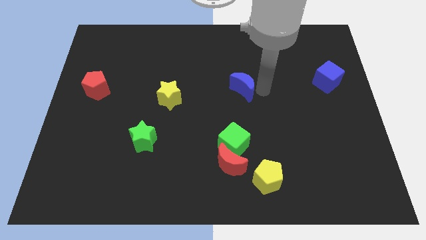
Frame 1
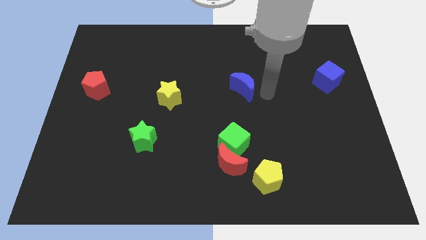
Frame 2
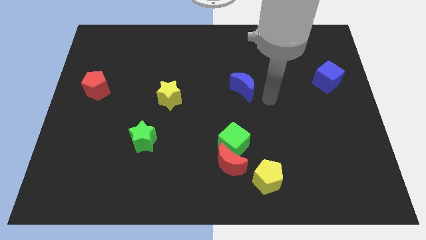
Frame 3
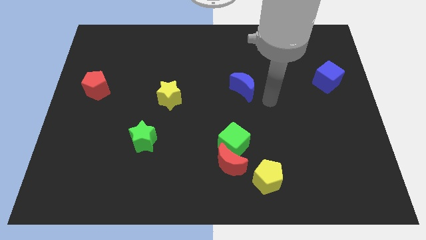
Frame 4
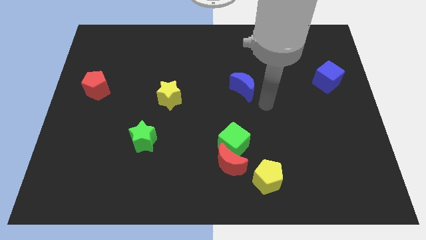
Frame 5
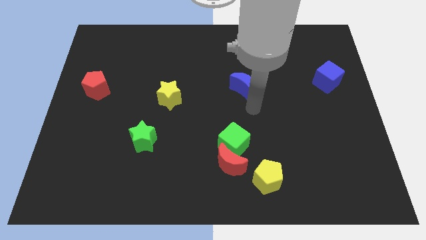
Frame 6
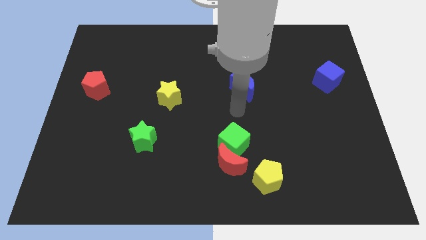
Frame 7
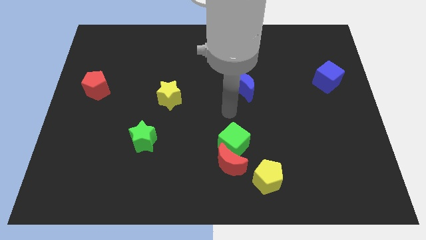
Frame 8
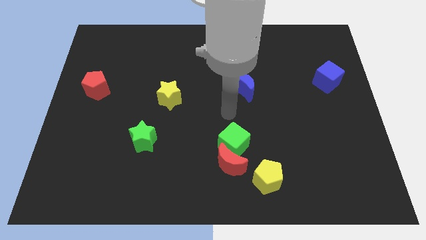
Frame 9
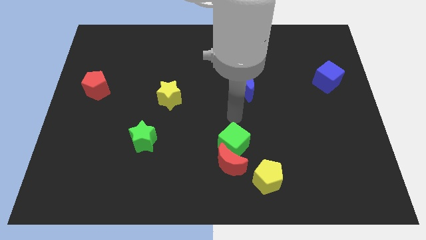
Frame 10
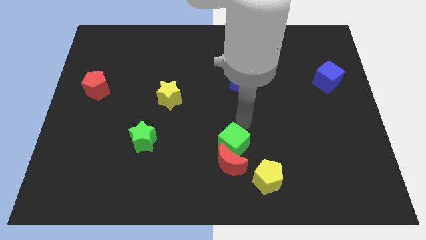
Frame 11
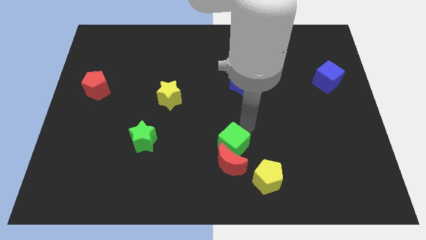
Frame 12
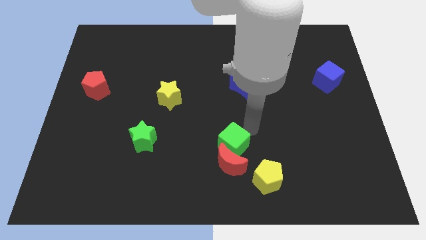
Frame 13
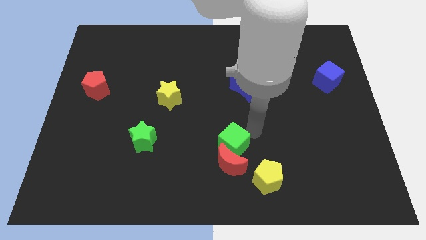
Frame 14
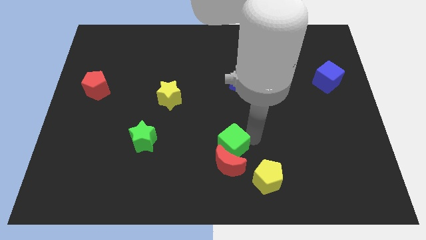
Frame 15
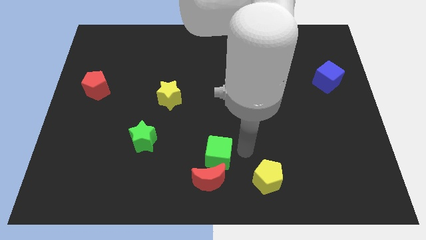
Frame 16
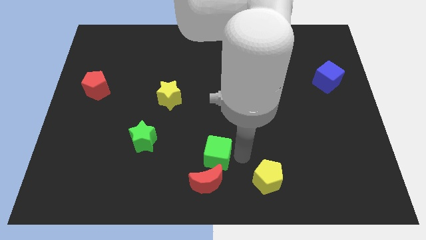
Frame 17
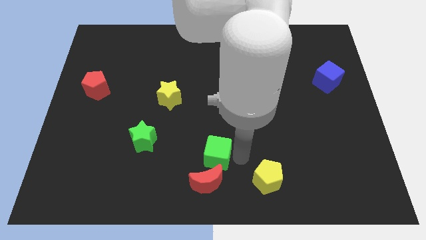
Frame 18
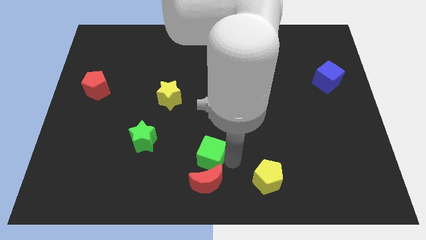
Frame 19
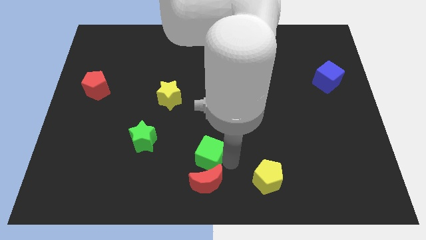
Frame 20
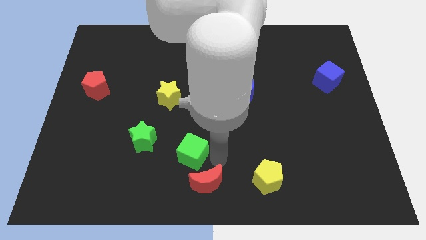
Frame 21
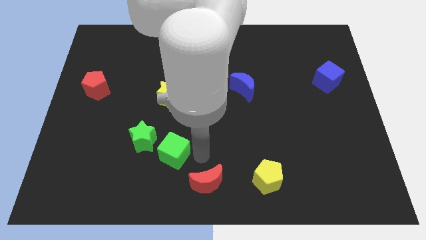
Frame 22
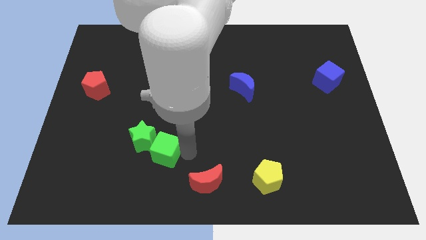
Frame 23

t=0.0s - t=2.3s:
move the green cube close to the green star

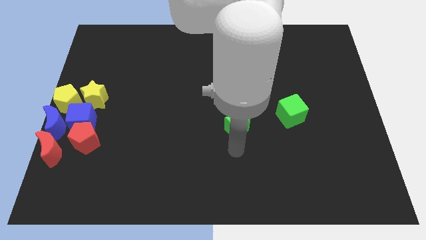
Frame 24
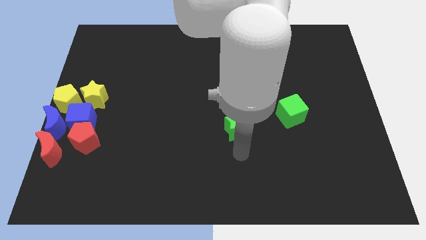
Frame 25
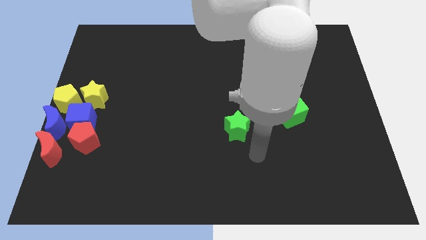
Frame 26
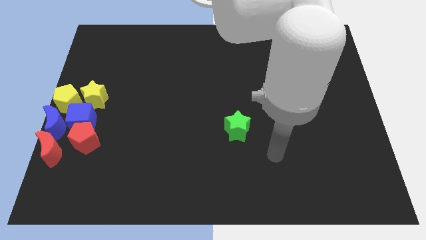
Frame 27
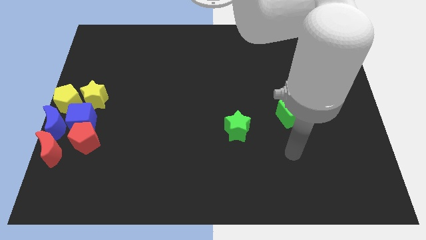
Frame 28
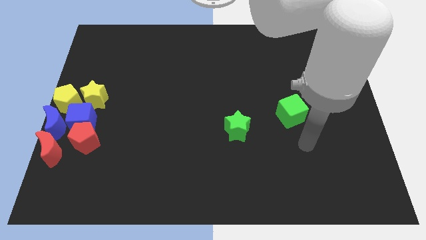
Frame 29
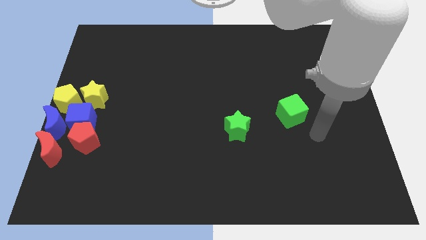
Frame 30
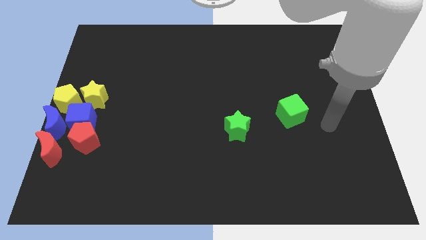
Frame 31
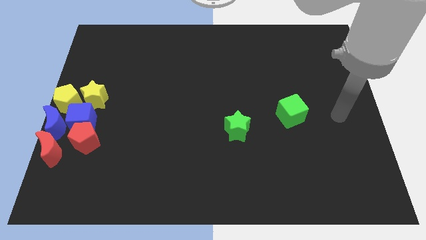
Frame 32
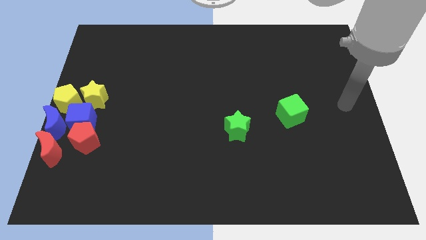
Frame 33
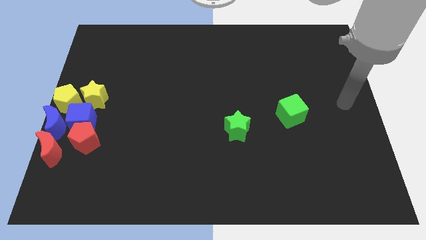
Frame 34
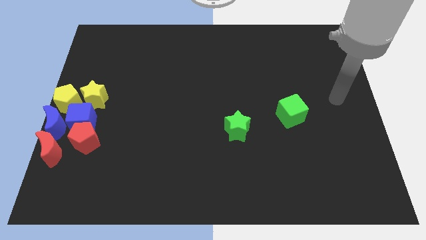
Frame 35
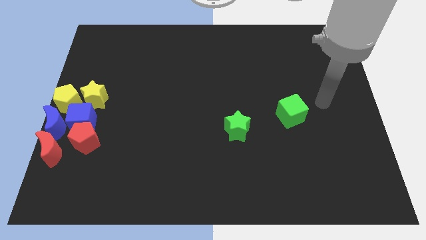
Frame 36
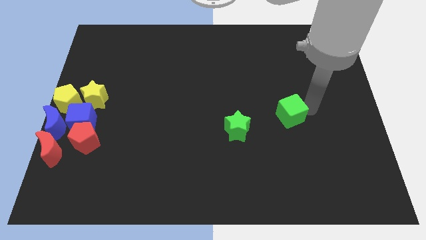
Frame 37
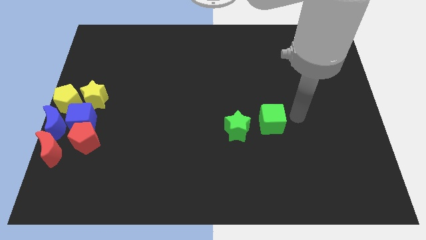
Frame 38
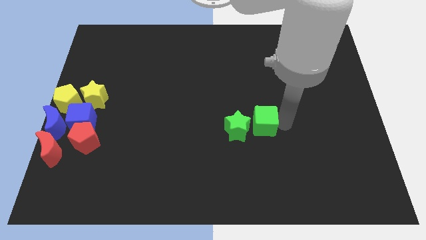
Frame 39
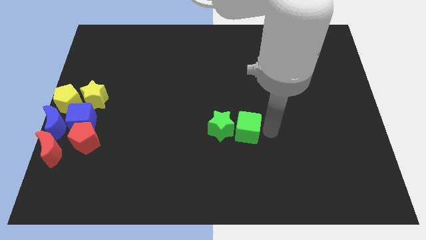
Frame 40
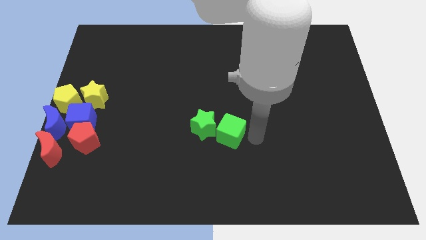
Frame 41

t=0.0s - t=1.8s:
move the green cube into the right side of the green star

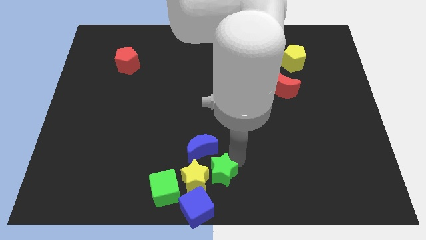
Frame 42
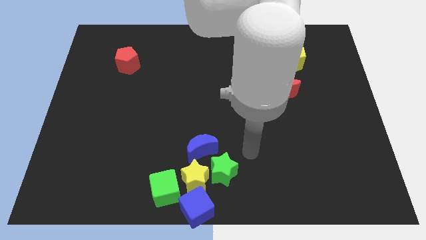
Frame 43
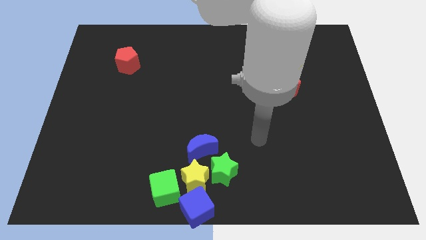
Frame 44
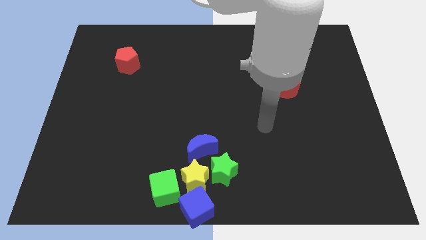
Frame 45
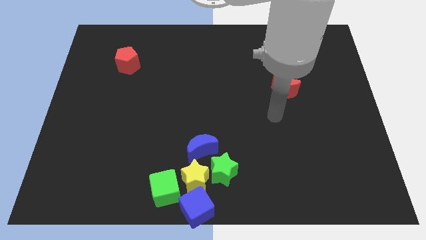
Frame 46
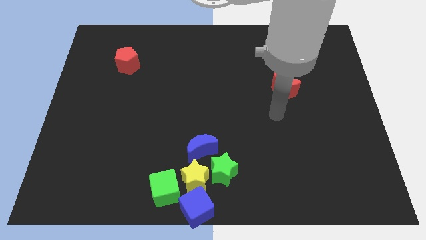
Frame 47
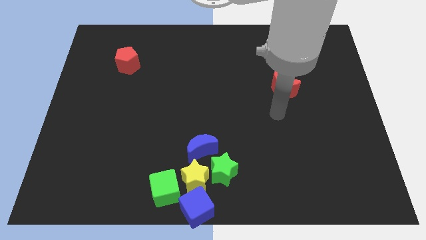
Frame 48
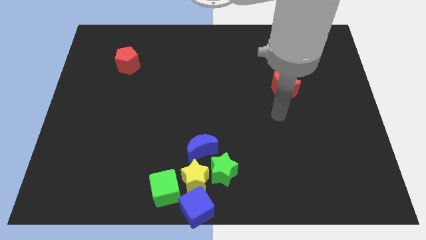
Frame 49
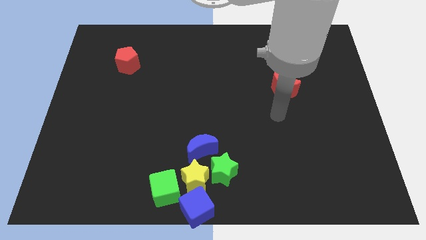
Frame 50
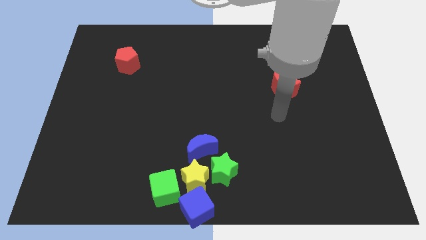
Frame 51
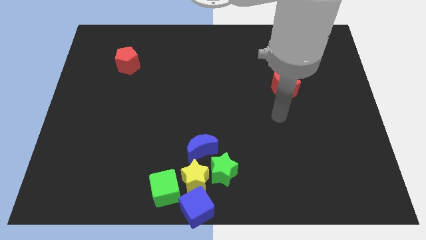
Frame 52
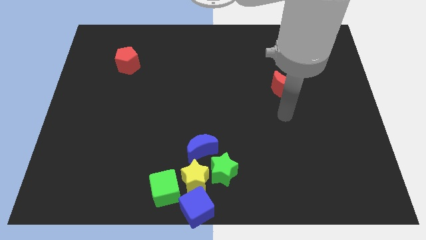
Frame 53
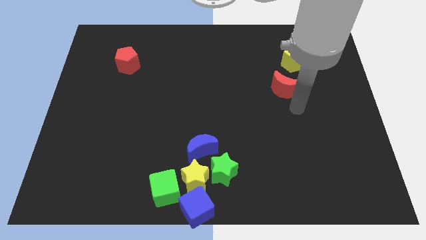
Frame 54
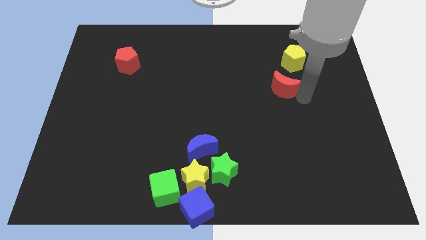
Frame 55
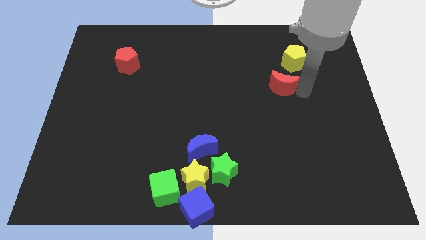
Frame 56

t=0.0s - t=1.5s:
move your arm right to the red moon

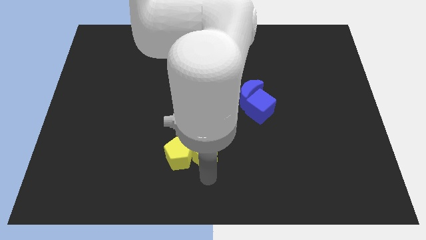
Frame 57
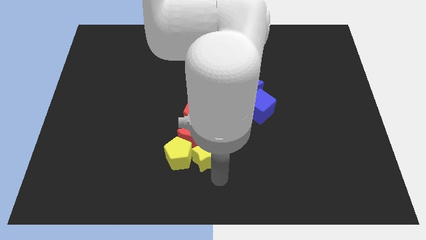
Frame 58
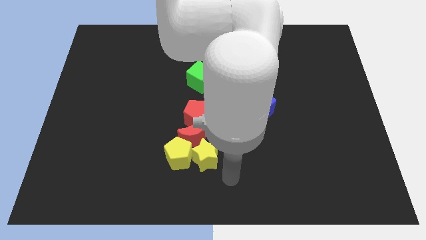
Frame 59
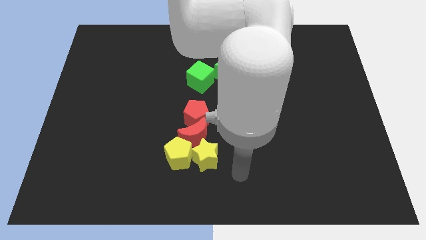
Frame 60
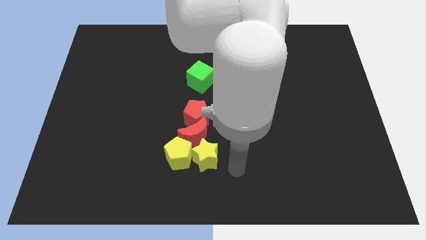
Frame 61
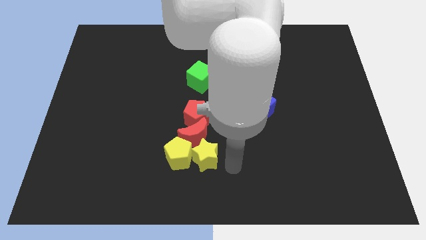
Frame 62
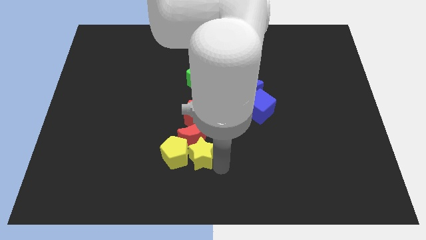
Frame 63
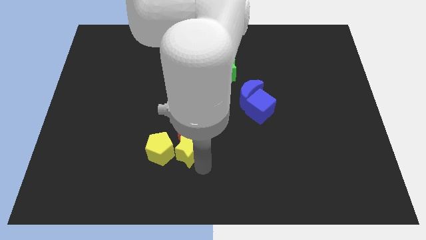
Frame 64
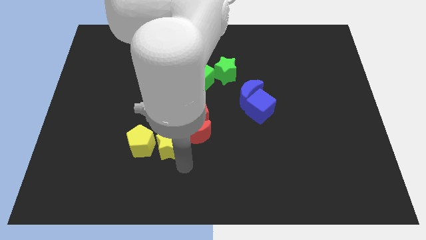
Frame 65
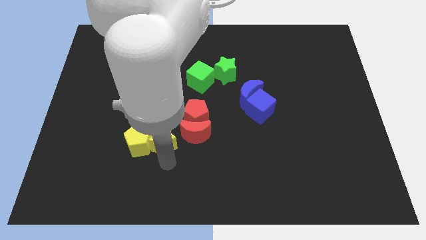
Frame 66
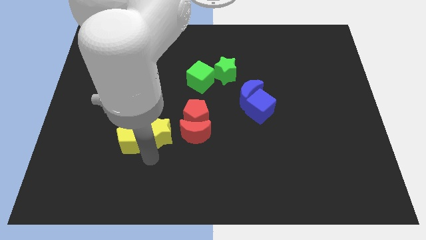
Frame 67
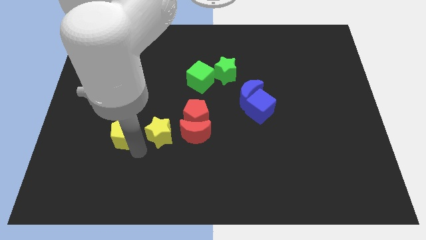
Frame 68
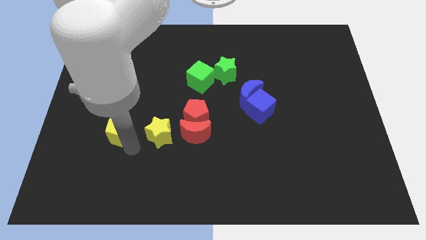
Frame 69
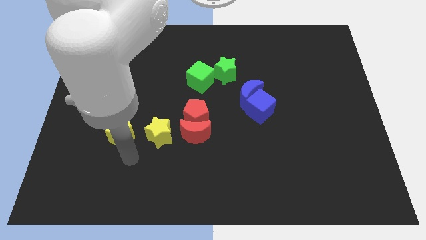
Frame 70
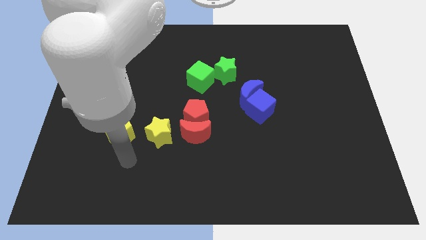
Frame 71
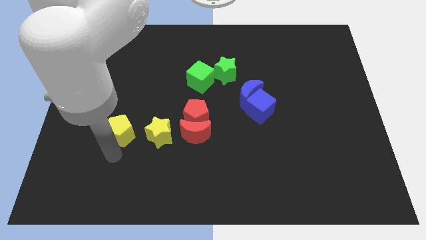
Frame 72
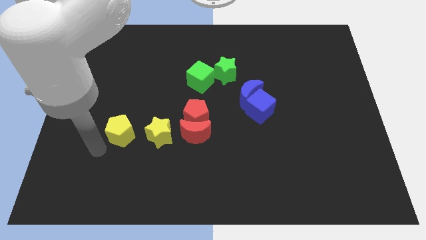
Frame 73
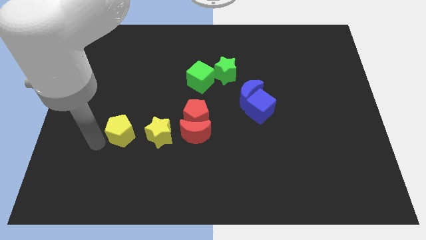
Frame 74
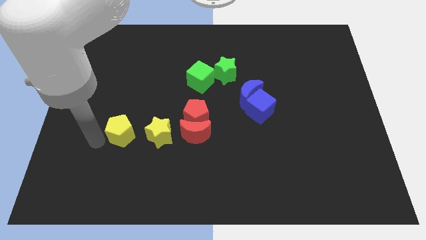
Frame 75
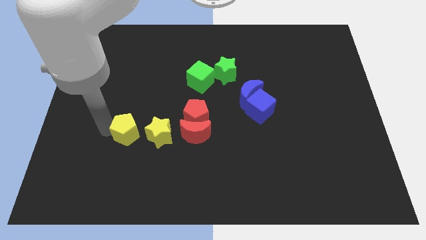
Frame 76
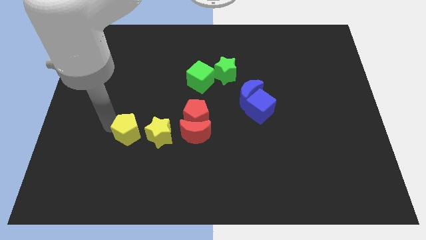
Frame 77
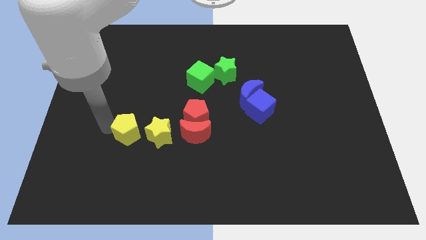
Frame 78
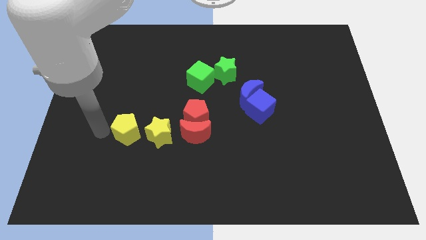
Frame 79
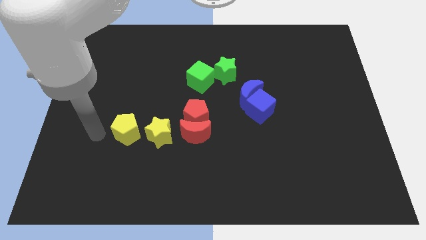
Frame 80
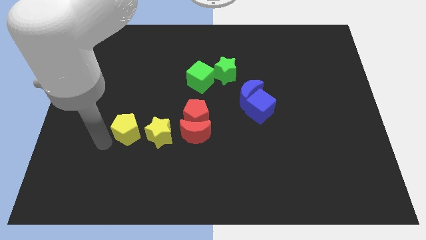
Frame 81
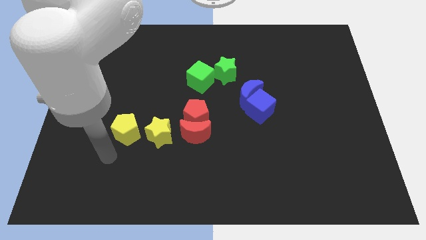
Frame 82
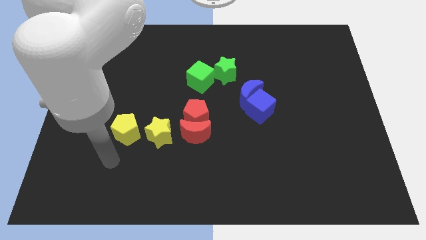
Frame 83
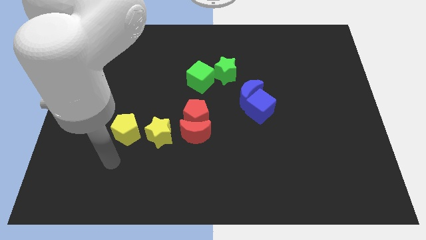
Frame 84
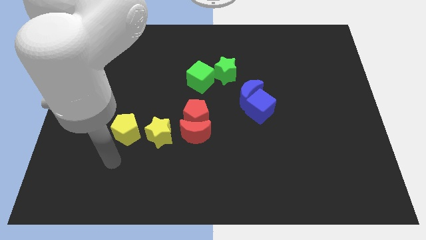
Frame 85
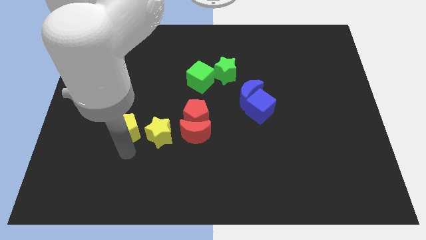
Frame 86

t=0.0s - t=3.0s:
drag yellow blocks towards the left of red red crescent
